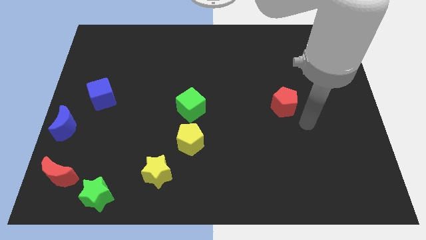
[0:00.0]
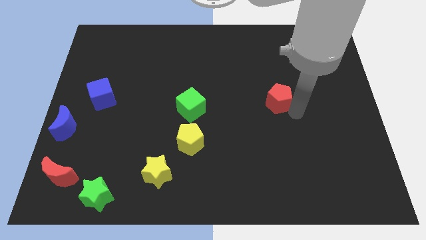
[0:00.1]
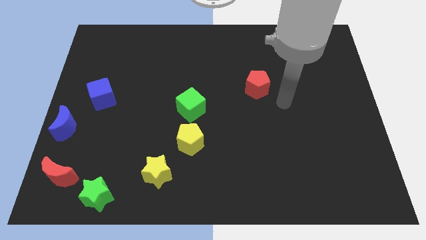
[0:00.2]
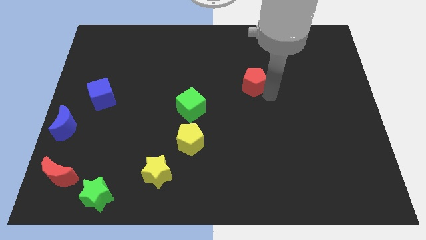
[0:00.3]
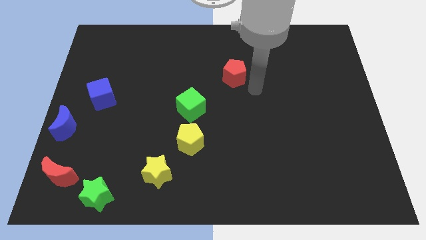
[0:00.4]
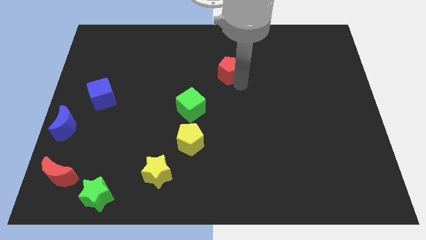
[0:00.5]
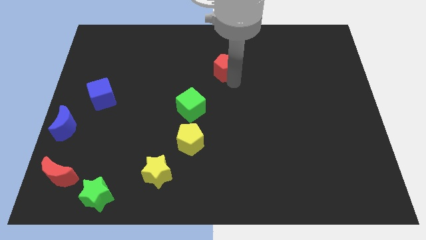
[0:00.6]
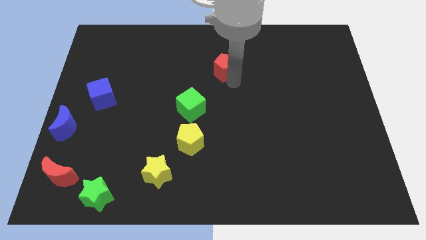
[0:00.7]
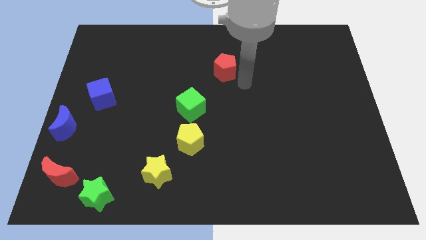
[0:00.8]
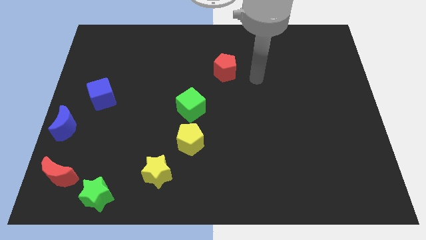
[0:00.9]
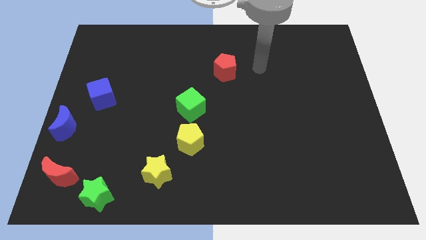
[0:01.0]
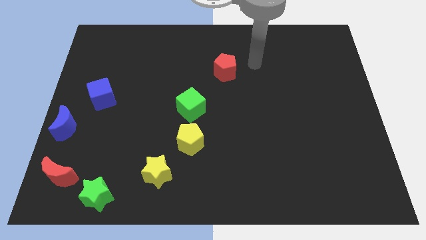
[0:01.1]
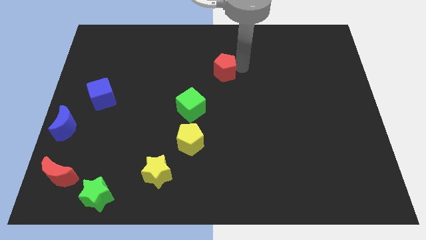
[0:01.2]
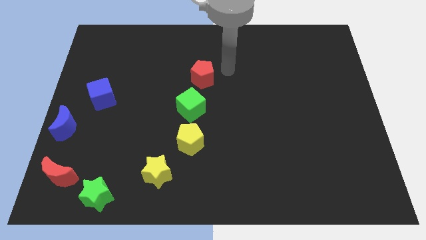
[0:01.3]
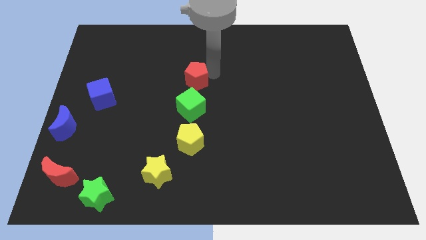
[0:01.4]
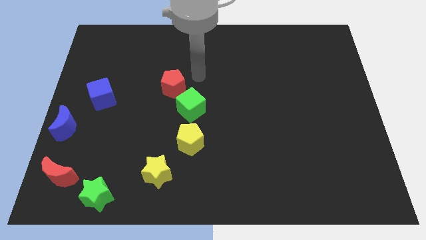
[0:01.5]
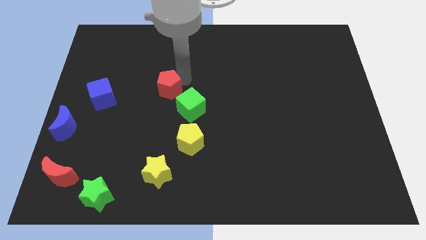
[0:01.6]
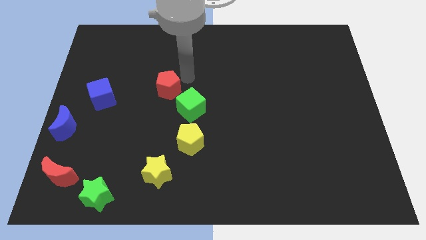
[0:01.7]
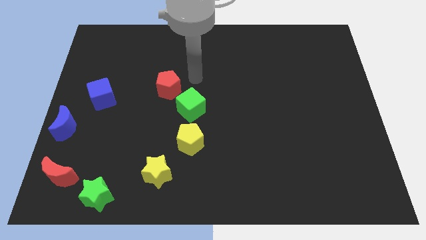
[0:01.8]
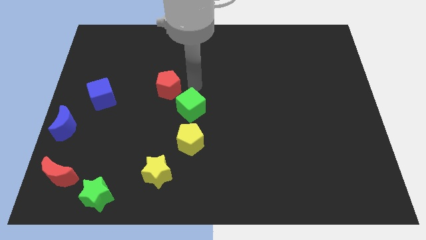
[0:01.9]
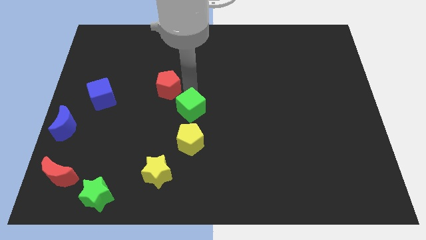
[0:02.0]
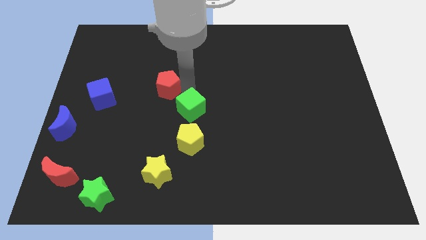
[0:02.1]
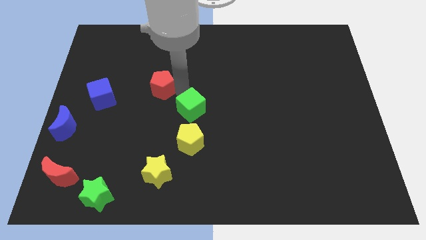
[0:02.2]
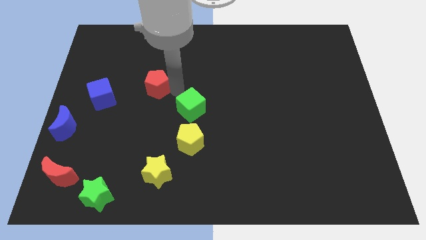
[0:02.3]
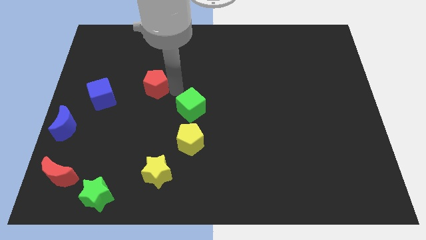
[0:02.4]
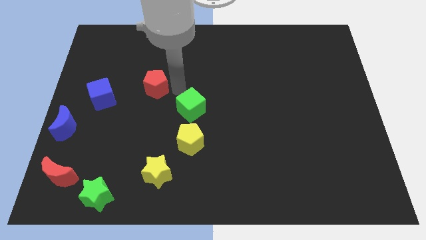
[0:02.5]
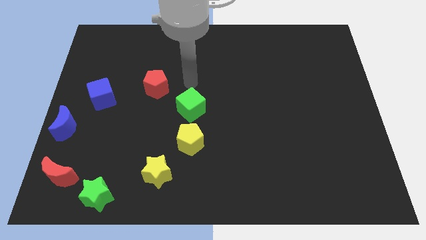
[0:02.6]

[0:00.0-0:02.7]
move the red pentagon to the right side of the green cube

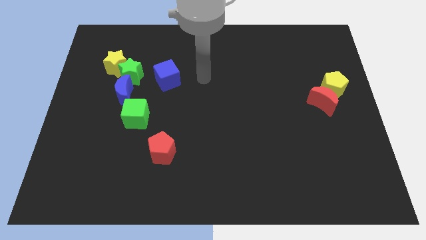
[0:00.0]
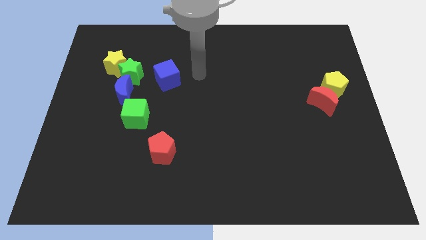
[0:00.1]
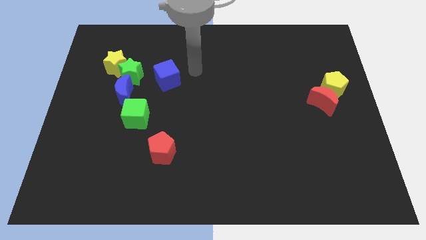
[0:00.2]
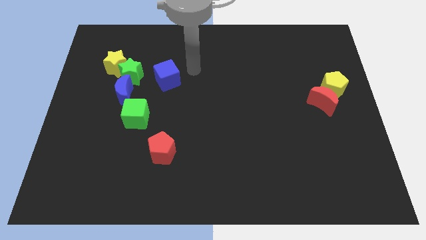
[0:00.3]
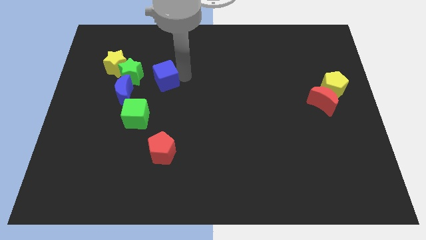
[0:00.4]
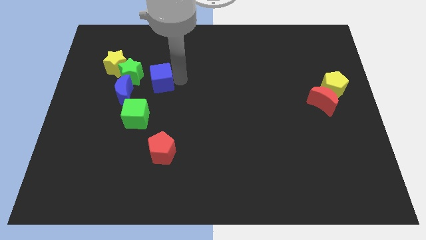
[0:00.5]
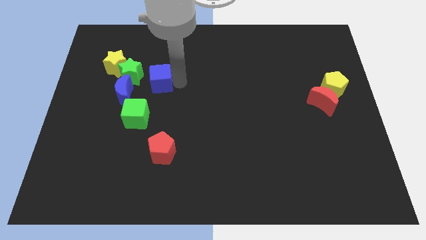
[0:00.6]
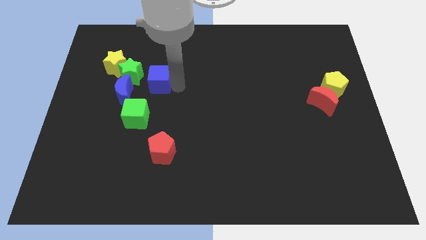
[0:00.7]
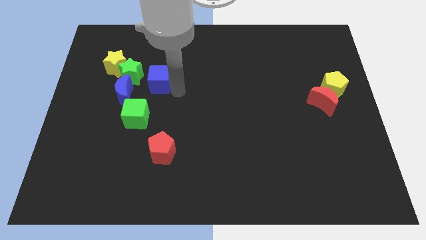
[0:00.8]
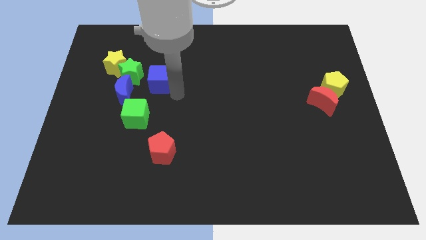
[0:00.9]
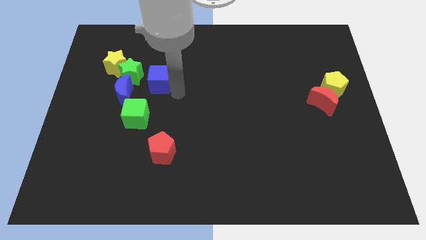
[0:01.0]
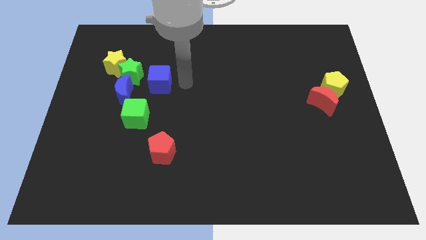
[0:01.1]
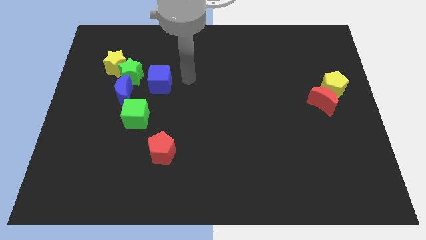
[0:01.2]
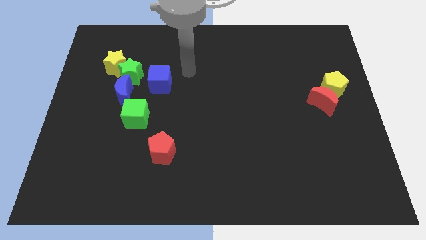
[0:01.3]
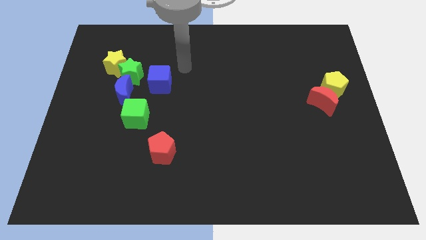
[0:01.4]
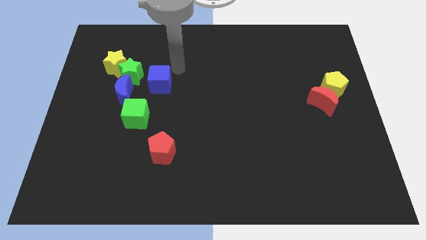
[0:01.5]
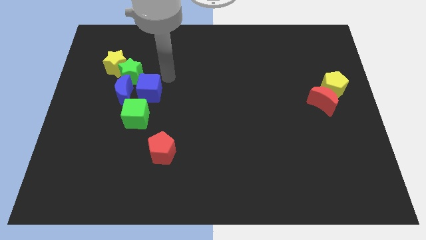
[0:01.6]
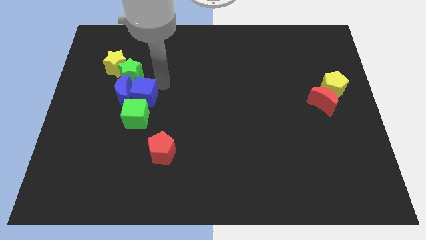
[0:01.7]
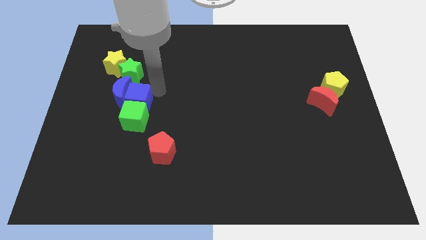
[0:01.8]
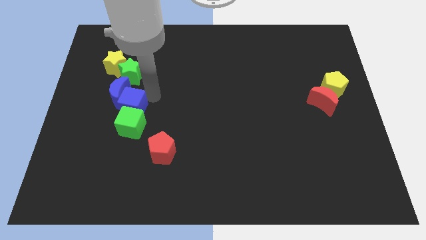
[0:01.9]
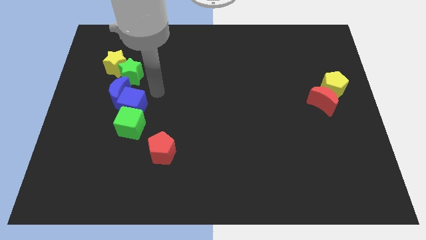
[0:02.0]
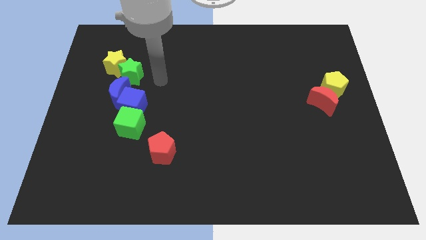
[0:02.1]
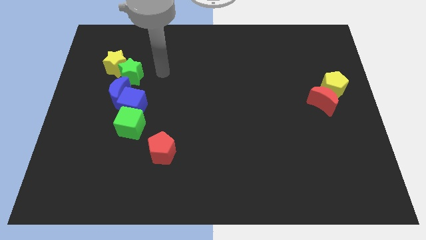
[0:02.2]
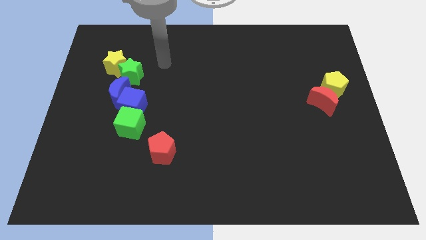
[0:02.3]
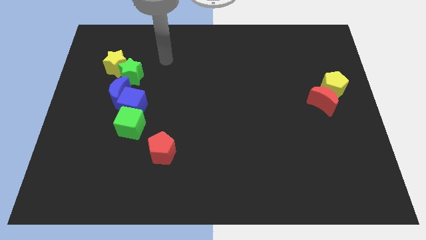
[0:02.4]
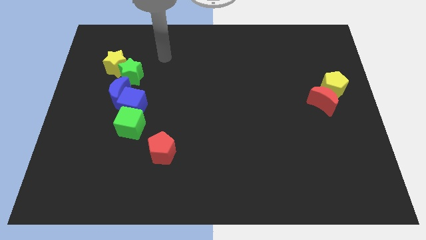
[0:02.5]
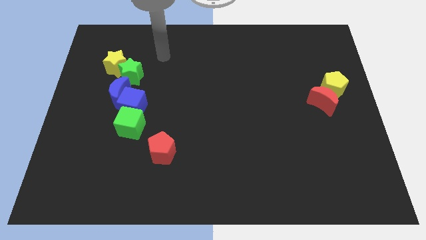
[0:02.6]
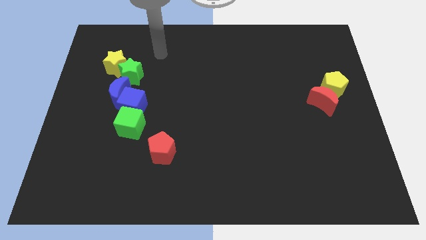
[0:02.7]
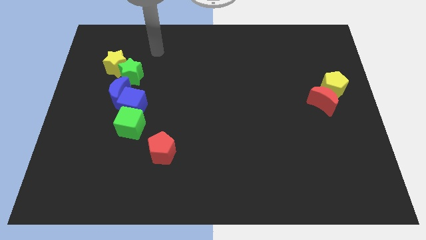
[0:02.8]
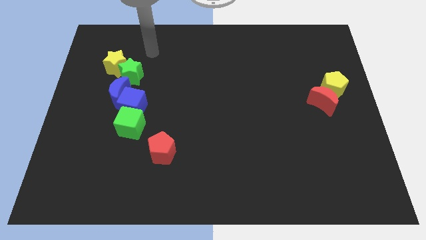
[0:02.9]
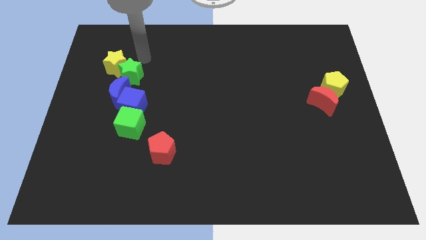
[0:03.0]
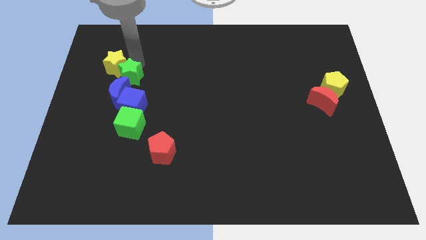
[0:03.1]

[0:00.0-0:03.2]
move blue cube right beside the blue moon

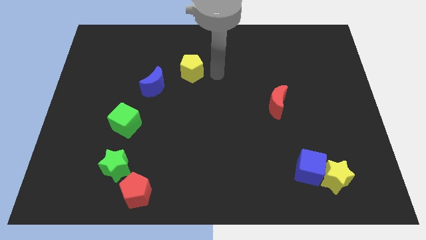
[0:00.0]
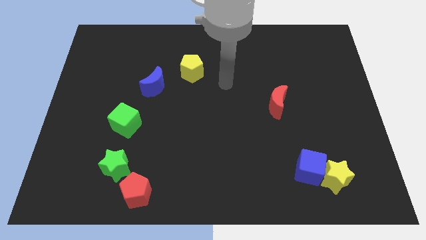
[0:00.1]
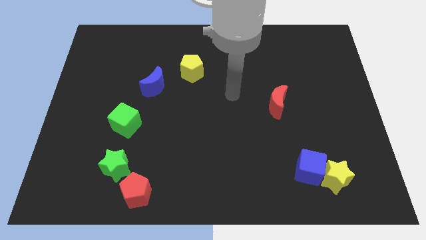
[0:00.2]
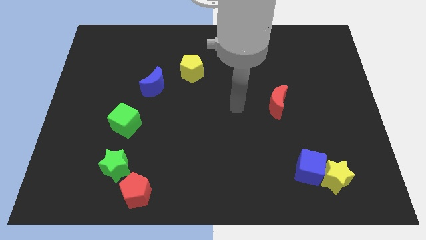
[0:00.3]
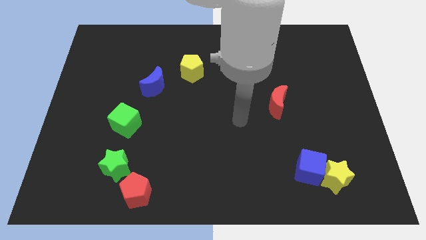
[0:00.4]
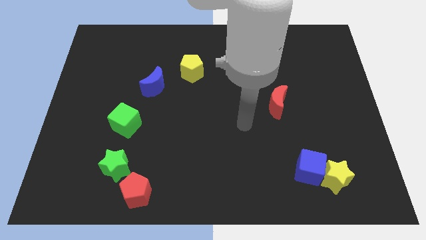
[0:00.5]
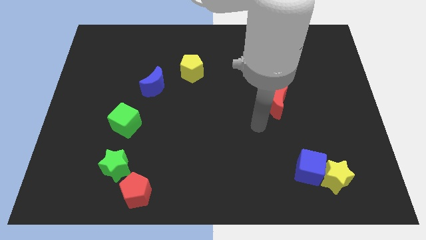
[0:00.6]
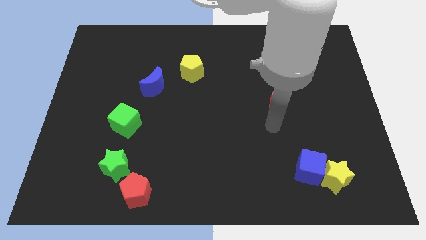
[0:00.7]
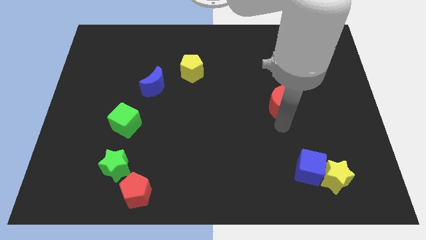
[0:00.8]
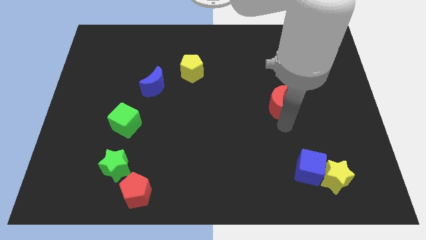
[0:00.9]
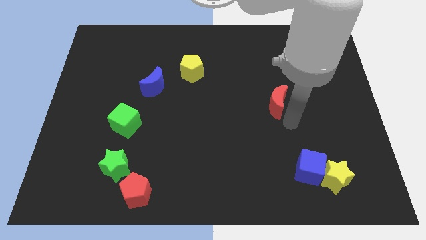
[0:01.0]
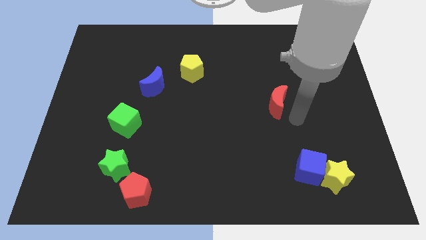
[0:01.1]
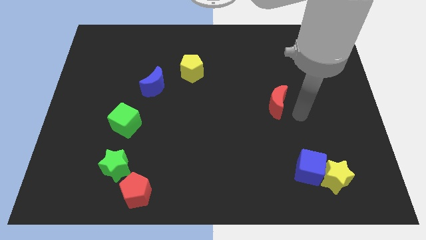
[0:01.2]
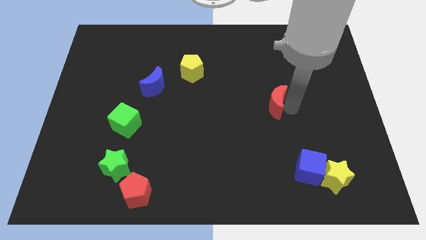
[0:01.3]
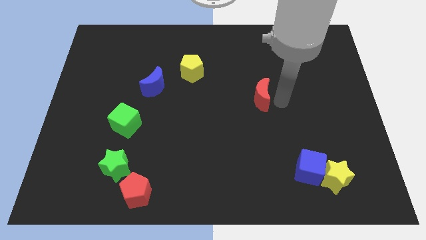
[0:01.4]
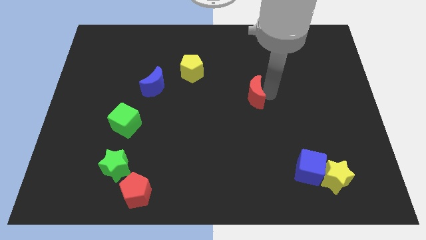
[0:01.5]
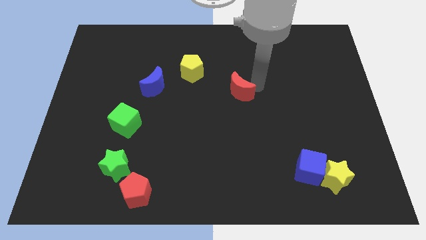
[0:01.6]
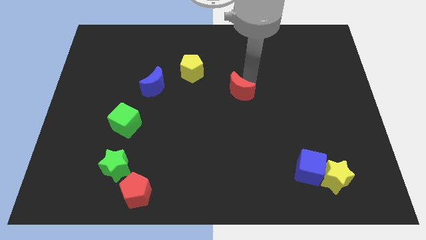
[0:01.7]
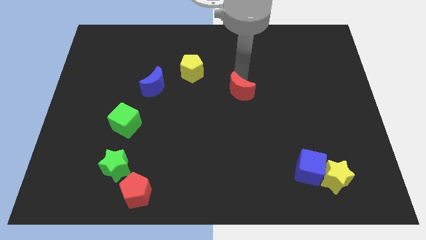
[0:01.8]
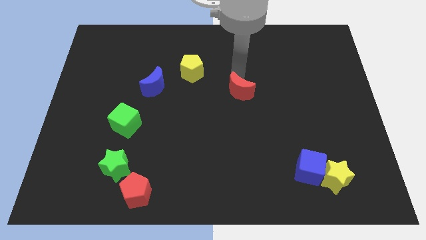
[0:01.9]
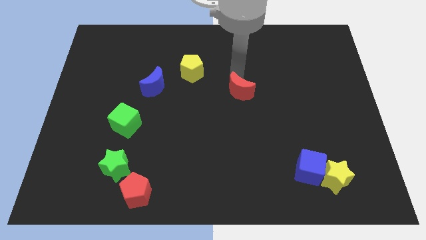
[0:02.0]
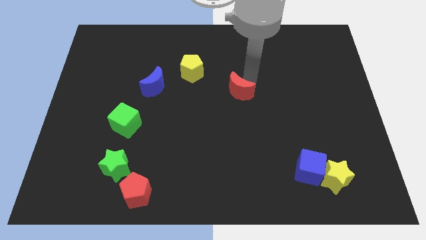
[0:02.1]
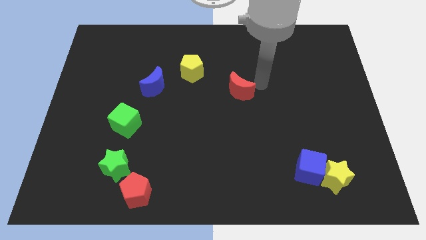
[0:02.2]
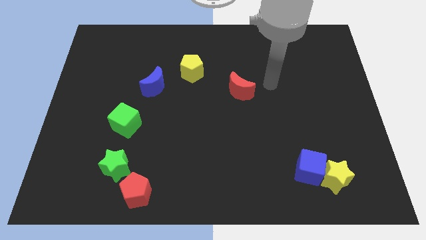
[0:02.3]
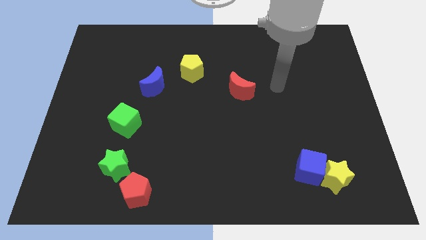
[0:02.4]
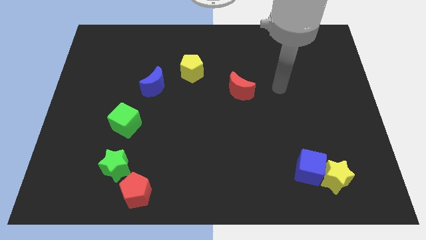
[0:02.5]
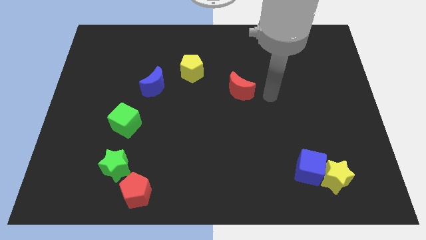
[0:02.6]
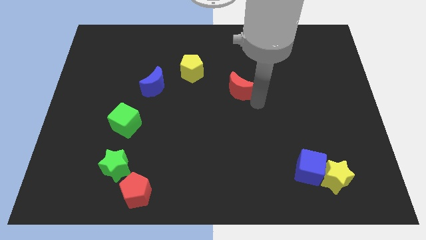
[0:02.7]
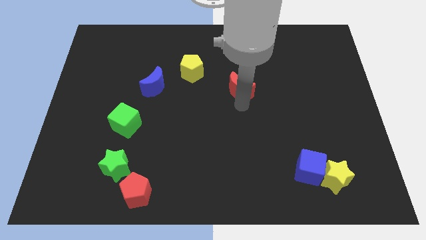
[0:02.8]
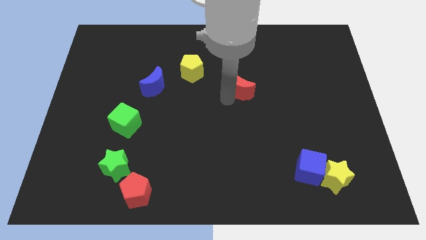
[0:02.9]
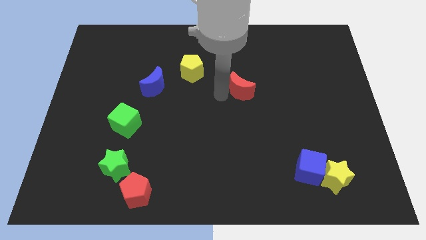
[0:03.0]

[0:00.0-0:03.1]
take the red crescent towards the yellow pentagon
